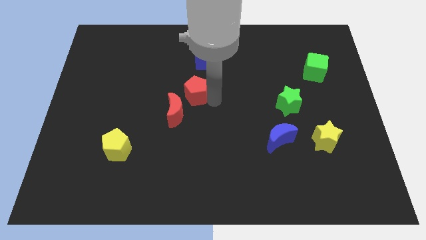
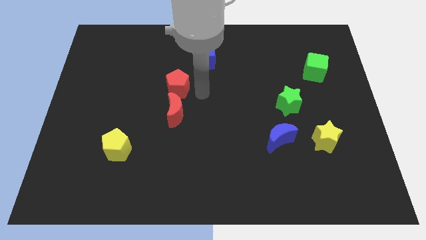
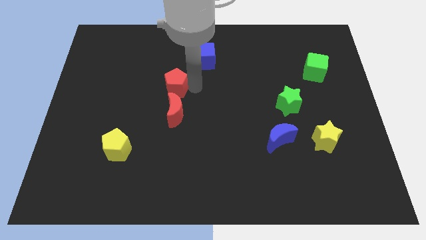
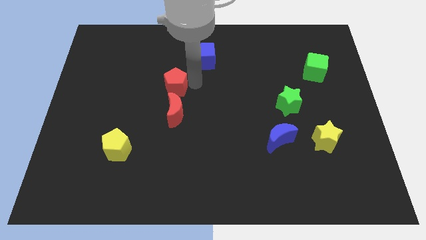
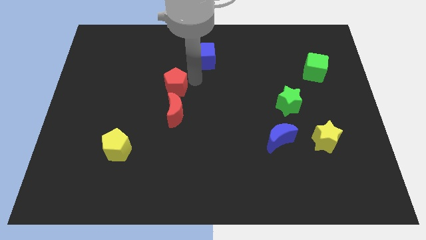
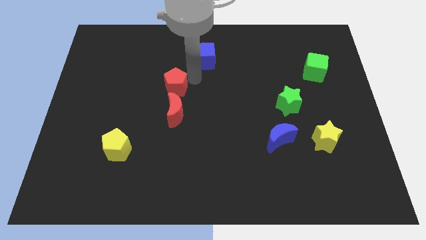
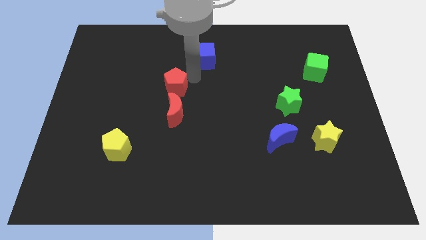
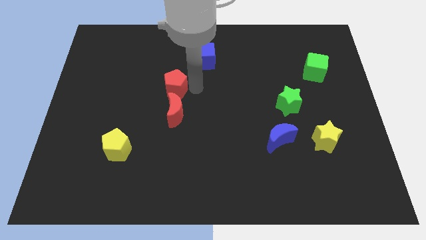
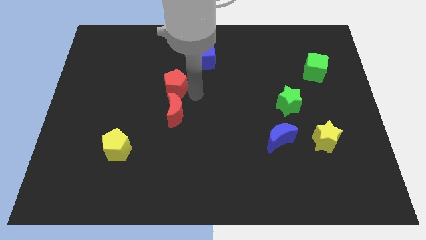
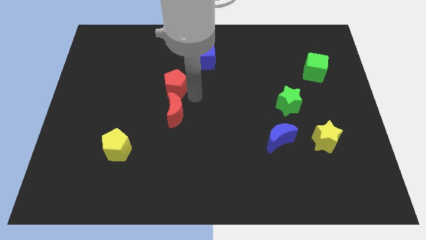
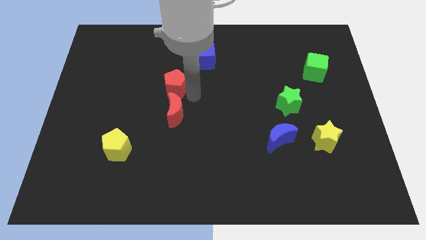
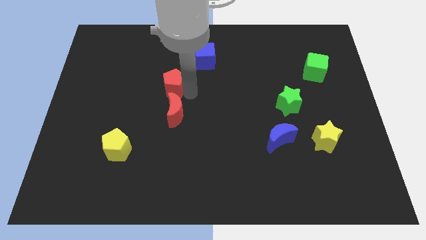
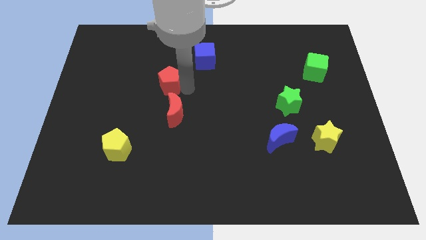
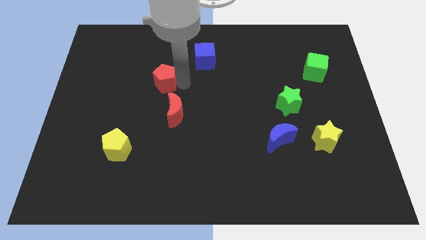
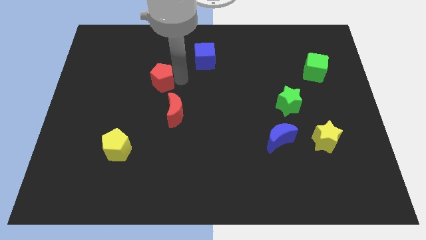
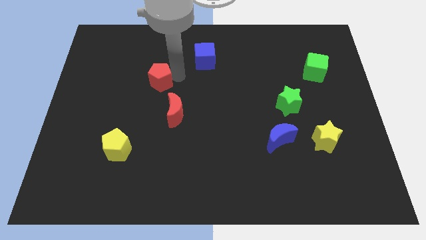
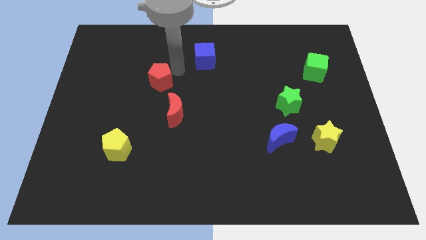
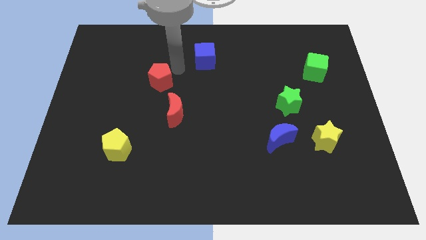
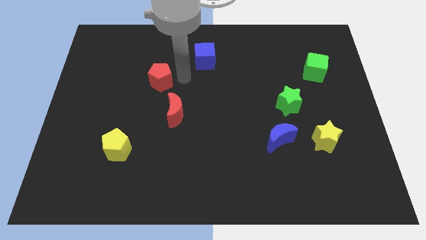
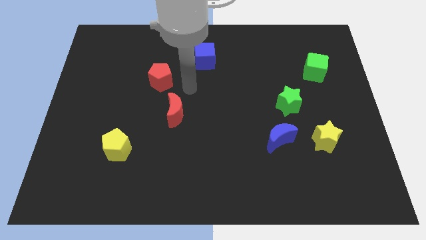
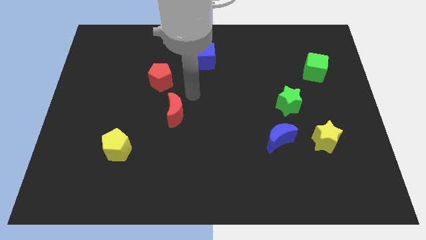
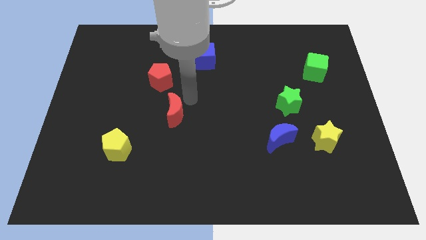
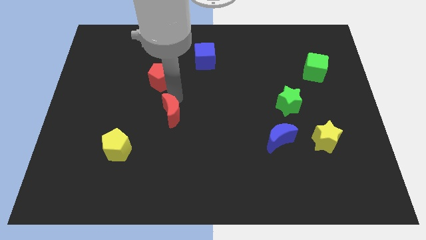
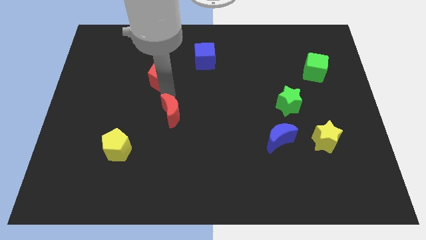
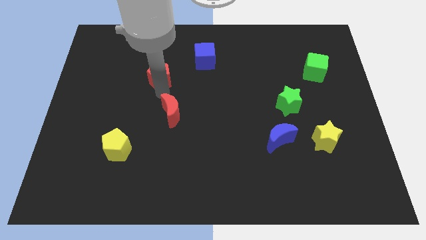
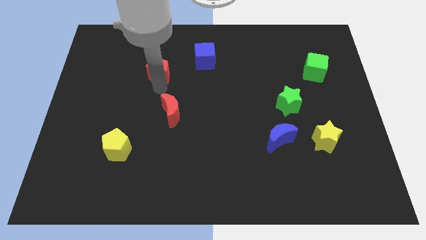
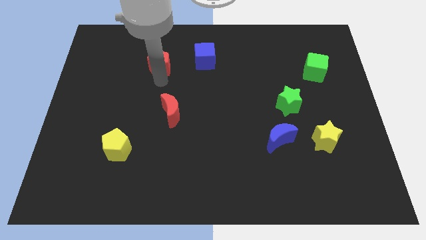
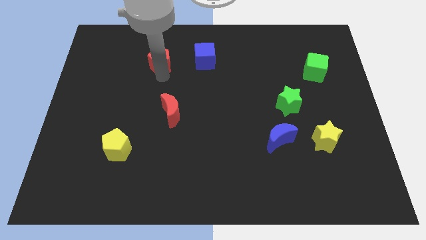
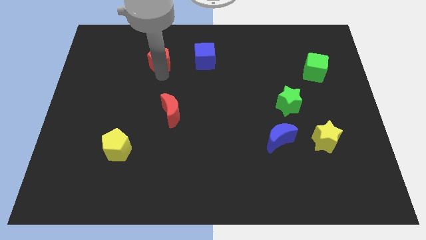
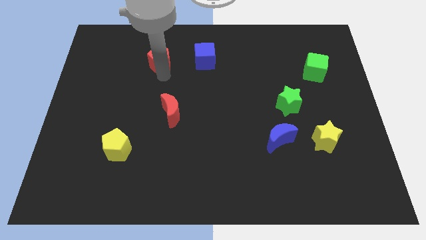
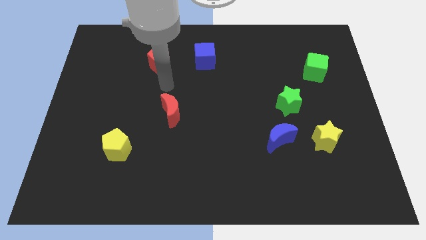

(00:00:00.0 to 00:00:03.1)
separate red pentagon from red moon

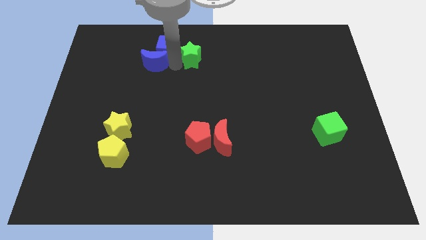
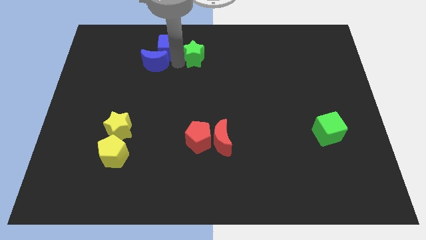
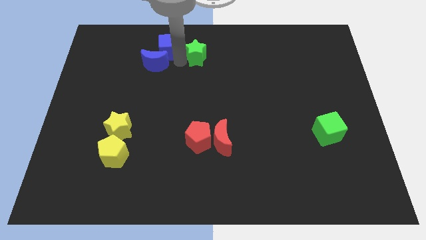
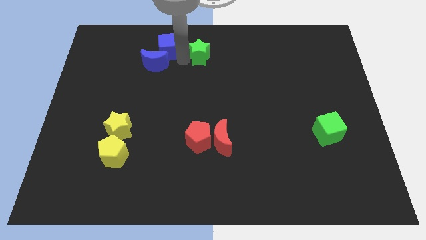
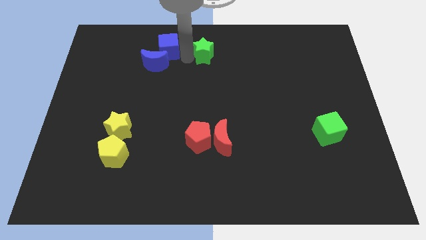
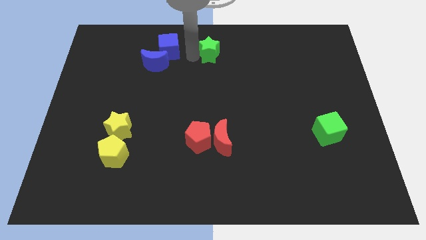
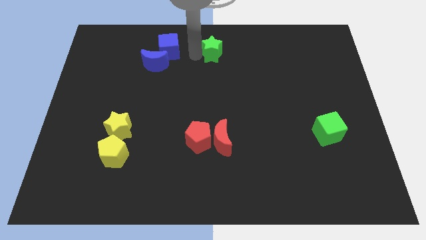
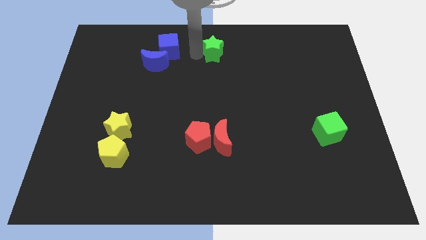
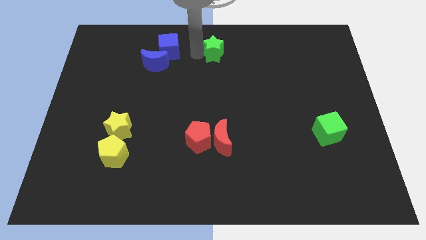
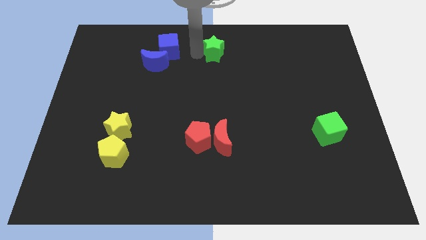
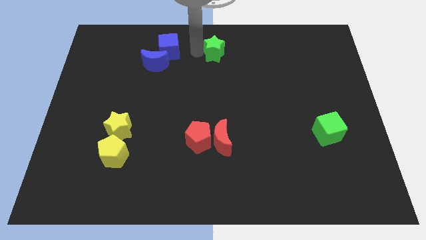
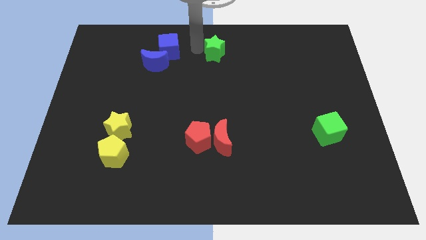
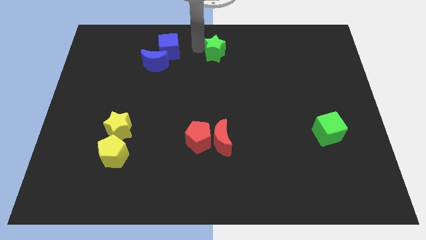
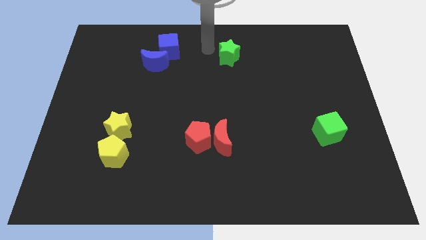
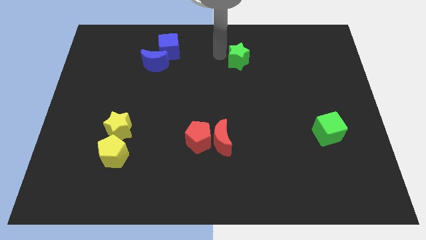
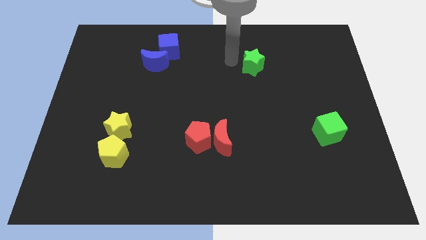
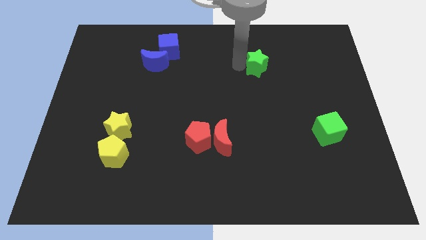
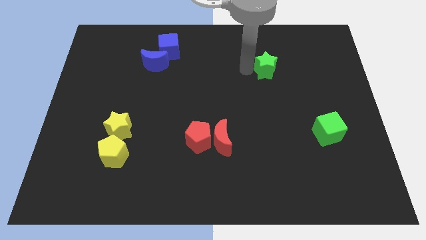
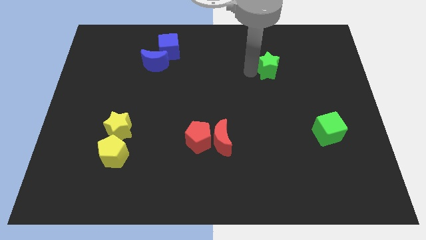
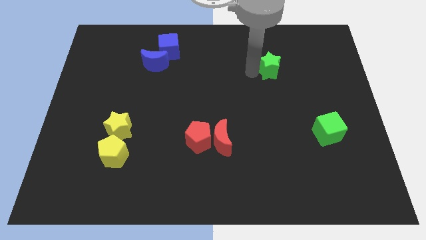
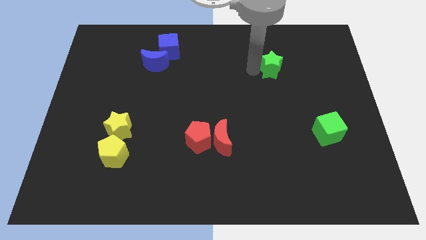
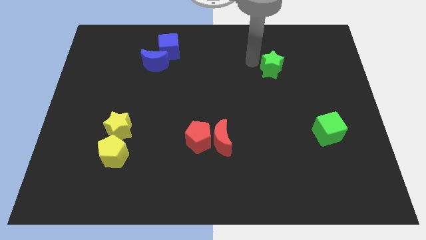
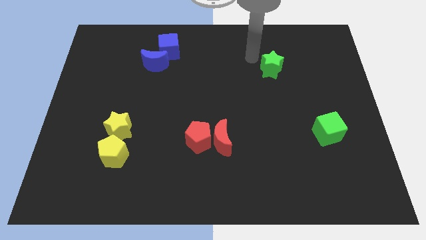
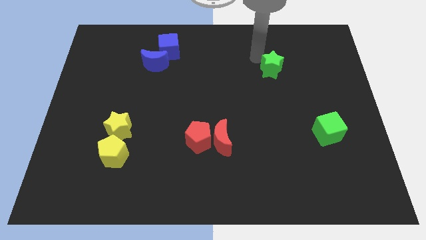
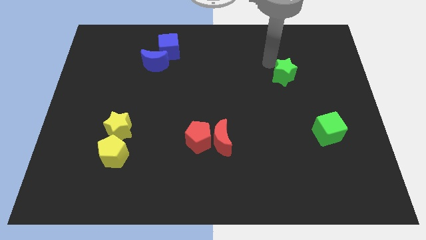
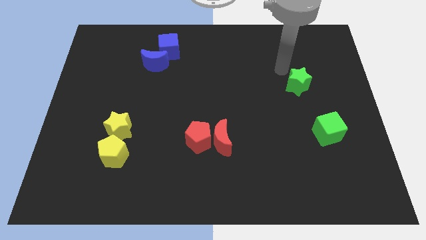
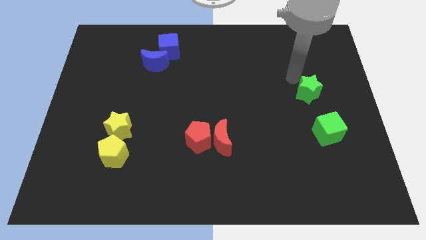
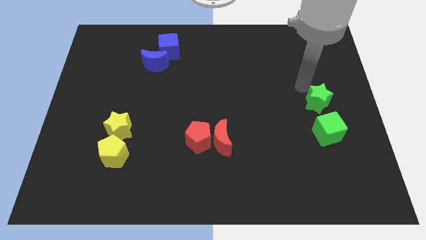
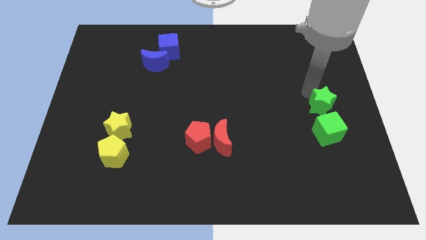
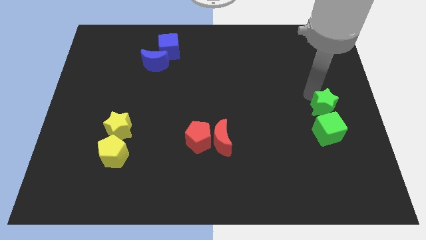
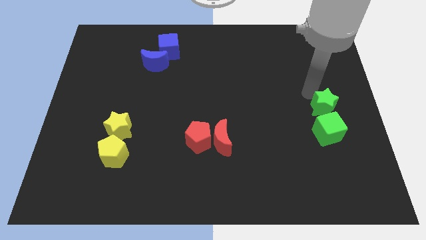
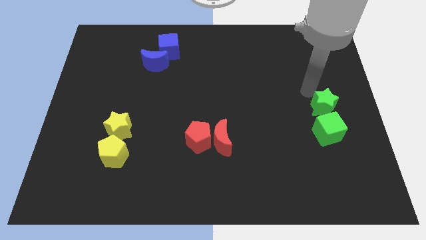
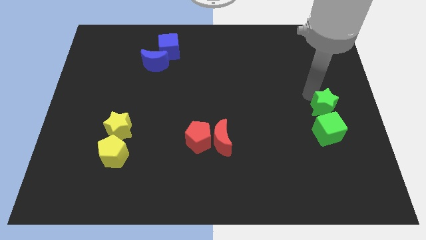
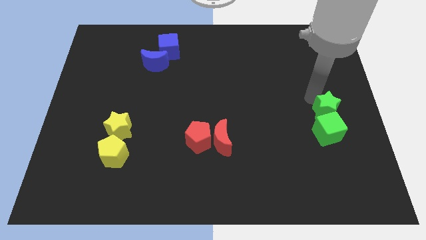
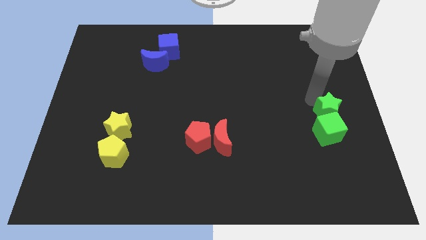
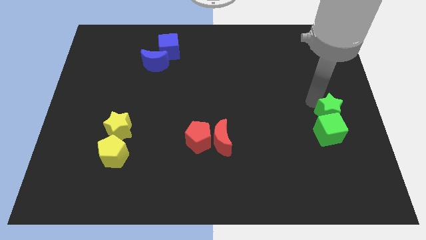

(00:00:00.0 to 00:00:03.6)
move green star into green cube

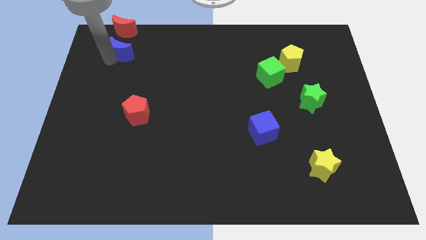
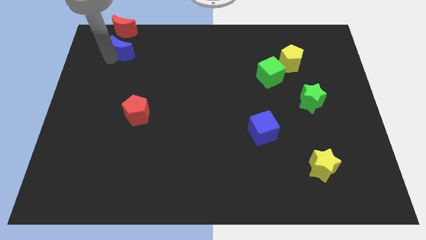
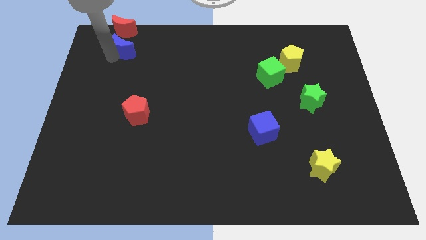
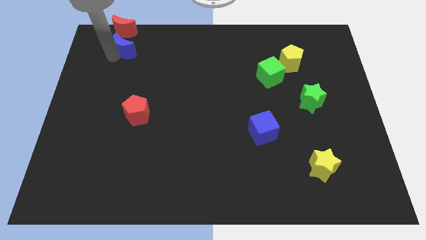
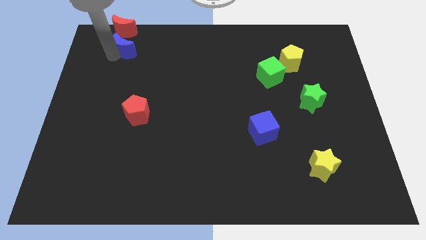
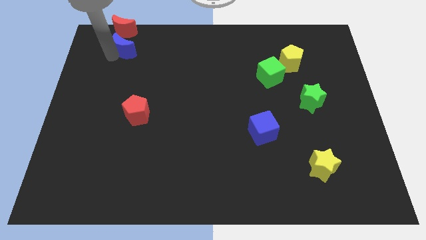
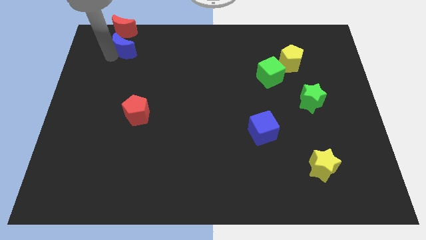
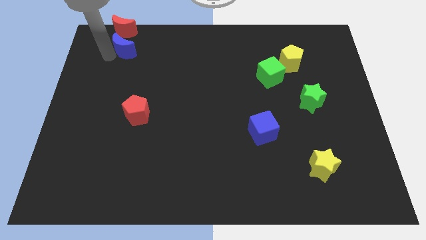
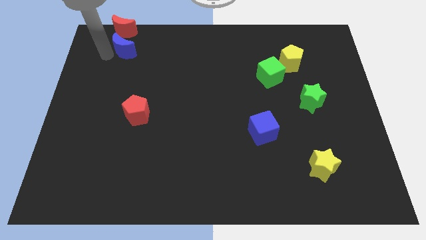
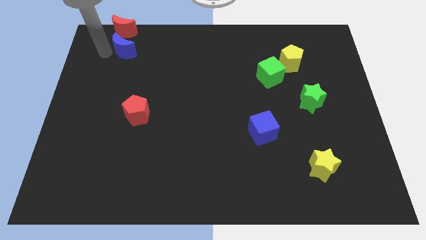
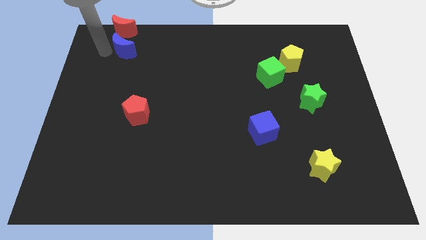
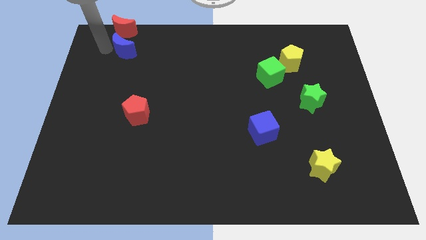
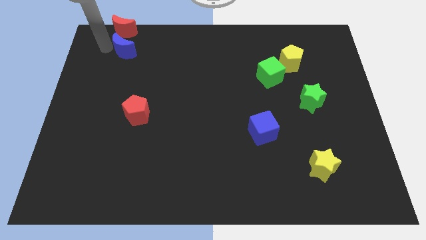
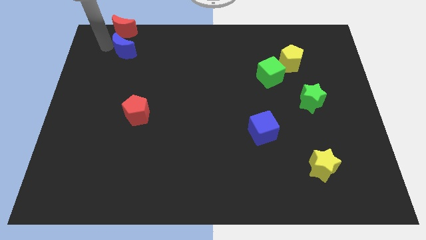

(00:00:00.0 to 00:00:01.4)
push the blue moon to the bottom of red crescent

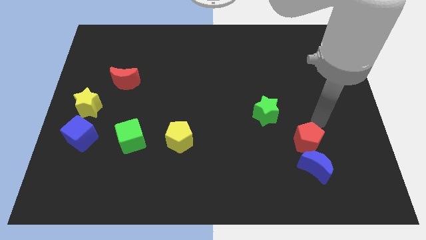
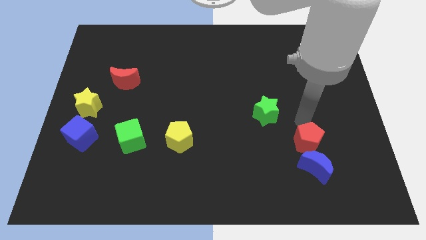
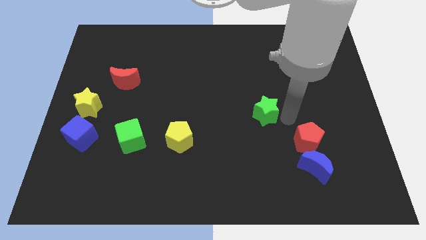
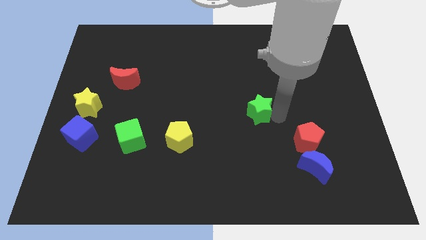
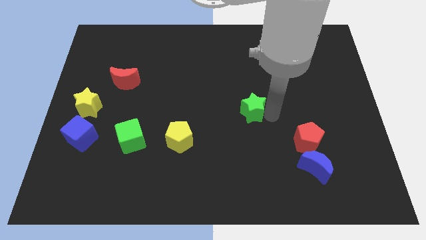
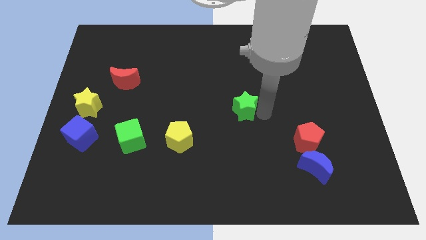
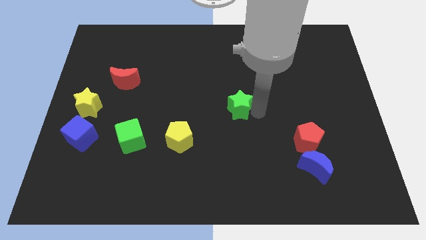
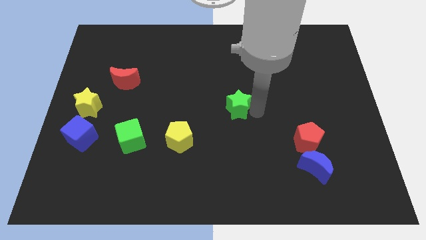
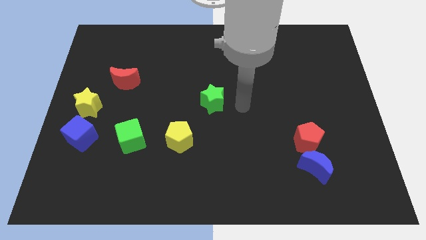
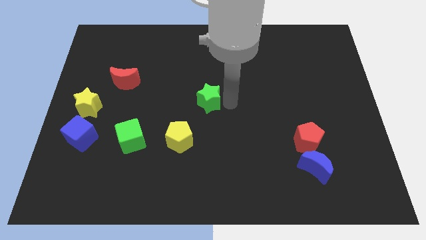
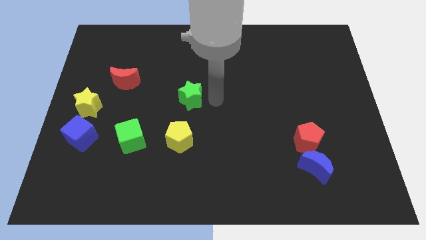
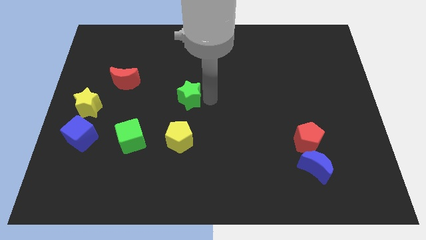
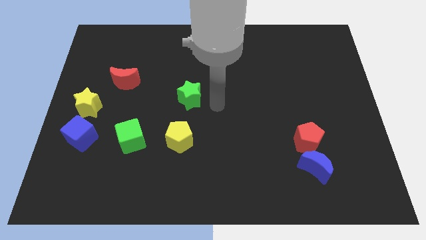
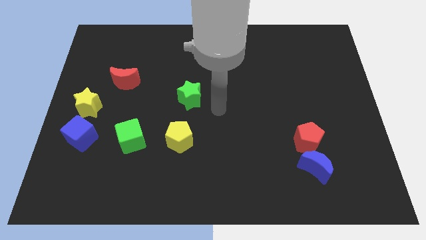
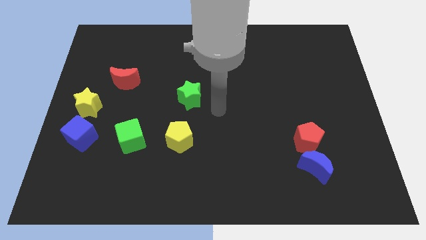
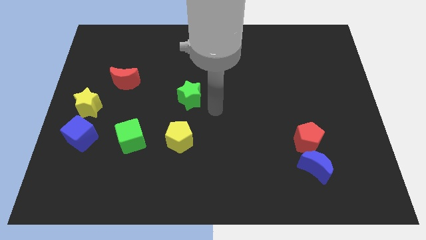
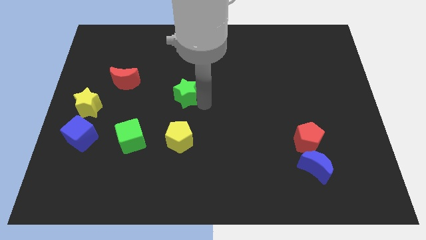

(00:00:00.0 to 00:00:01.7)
push the green star to the right of the yellow pentagon
